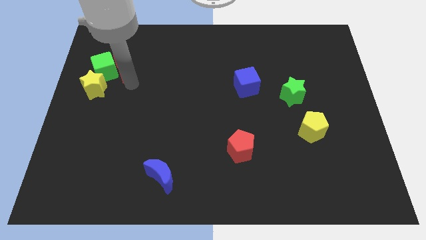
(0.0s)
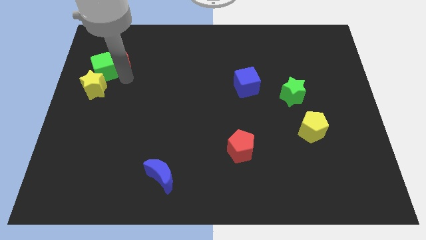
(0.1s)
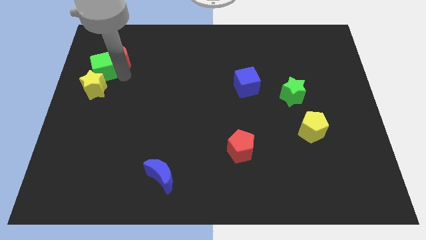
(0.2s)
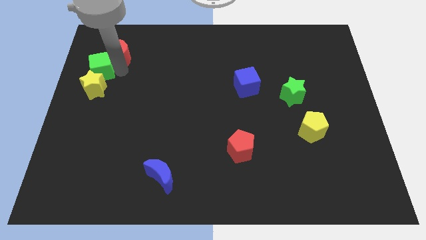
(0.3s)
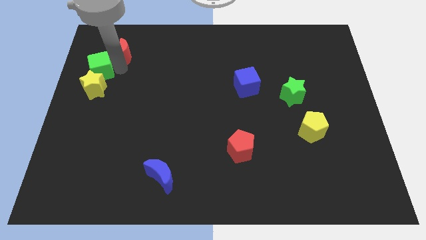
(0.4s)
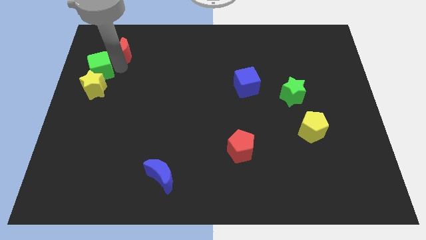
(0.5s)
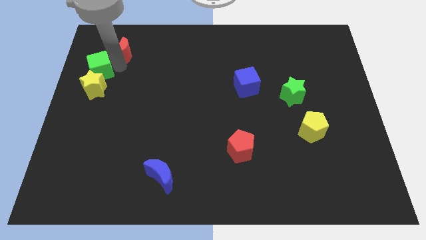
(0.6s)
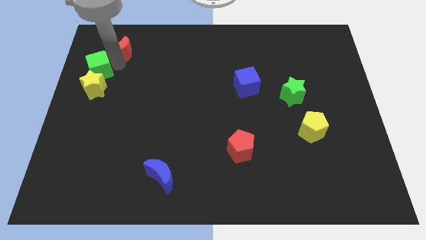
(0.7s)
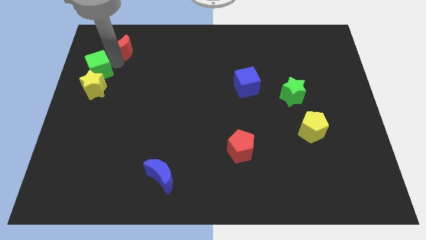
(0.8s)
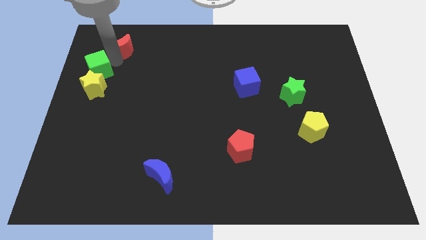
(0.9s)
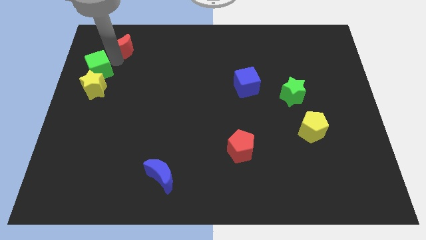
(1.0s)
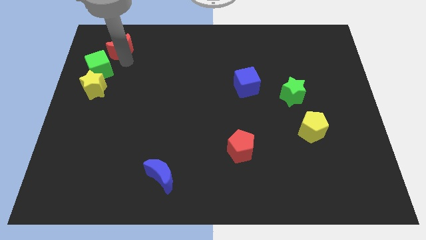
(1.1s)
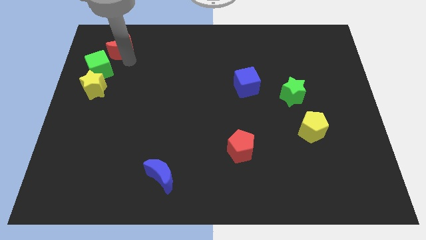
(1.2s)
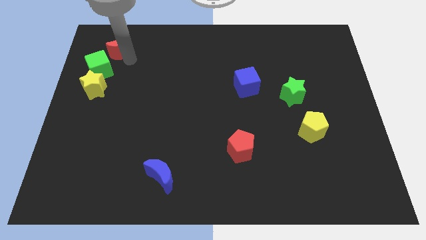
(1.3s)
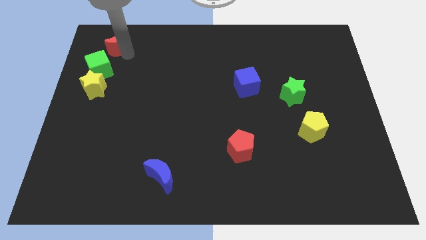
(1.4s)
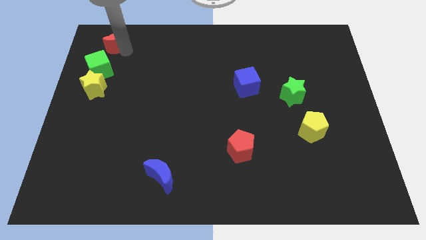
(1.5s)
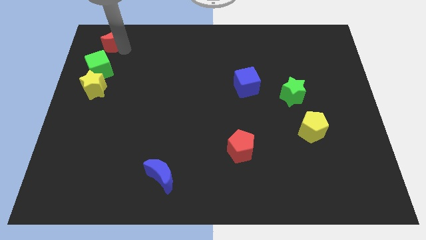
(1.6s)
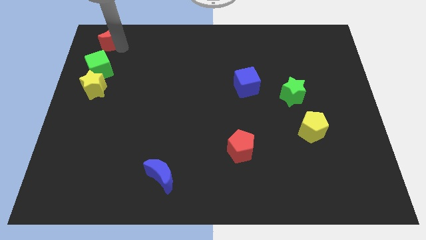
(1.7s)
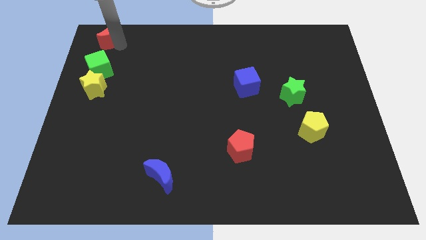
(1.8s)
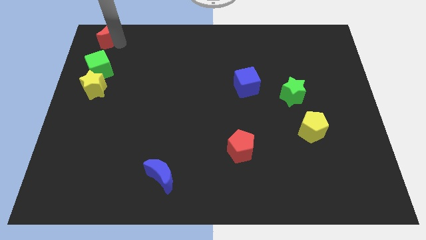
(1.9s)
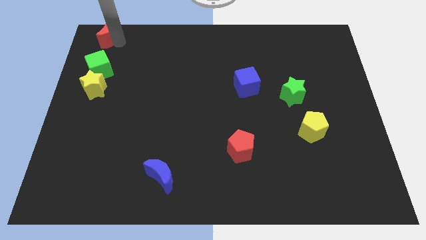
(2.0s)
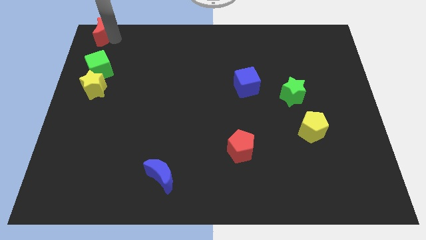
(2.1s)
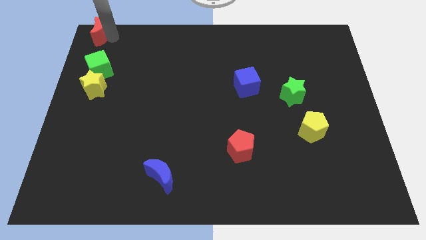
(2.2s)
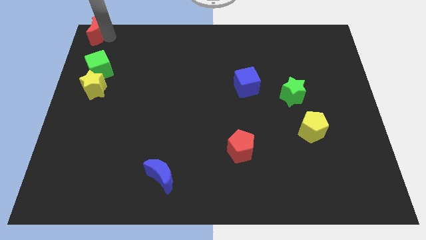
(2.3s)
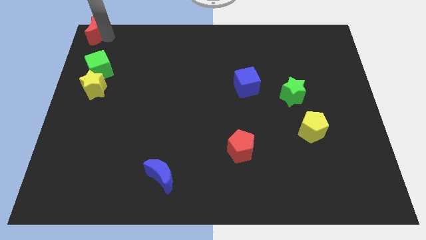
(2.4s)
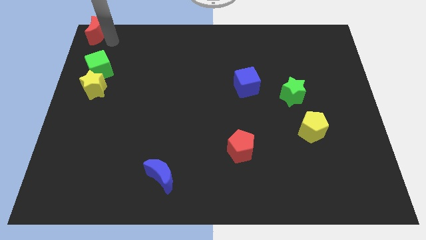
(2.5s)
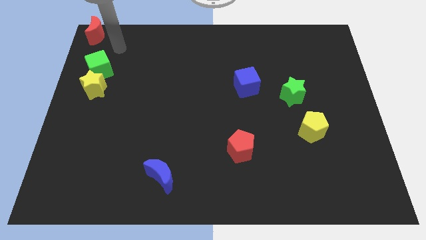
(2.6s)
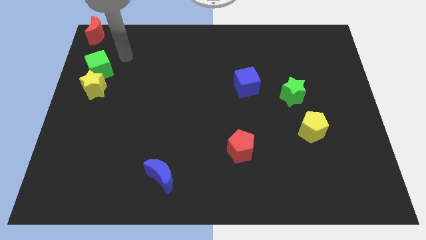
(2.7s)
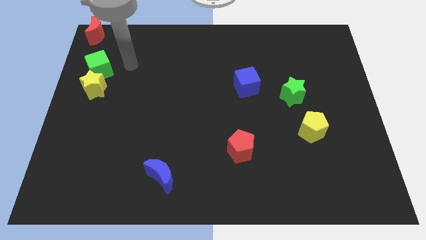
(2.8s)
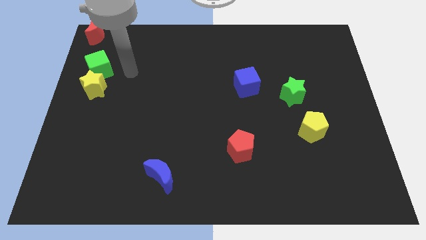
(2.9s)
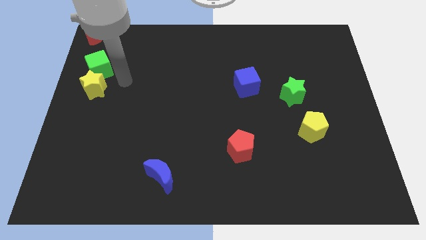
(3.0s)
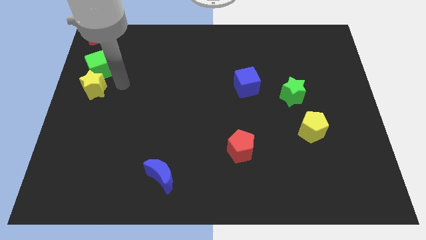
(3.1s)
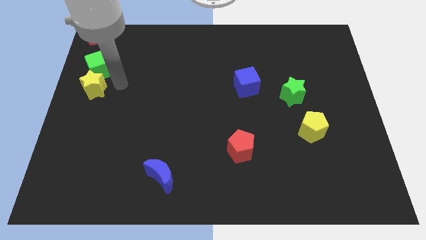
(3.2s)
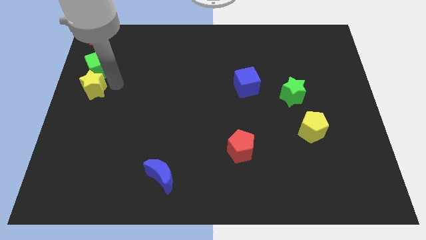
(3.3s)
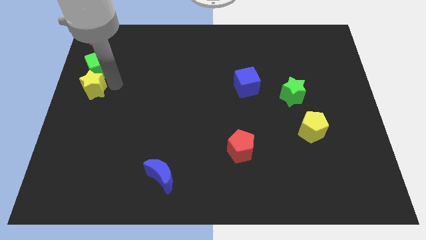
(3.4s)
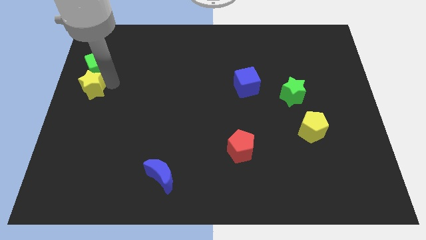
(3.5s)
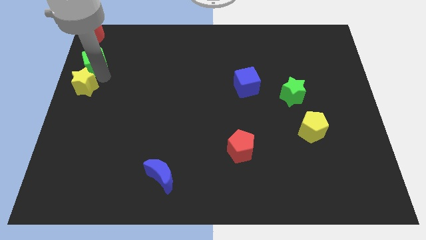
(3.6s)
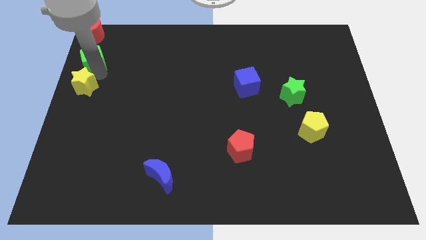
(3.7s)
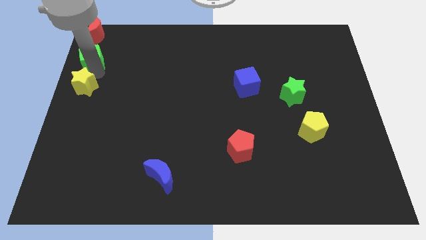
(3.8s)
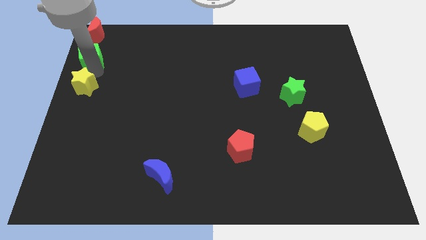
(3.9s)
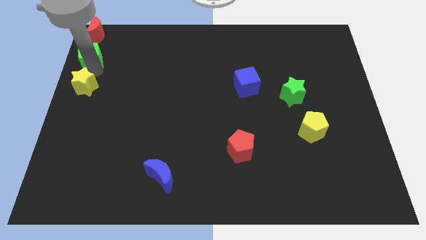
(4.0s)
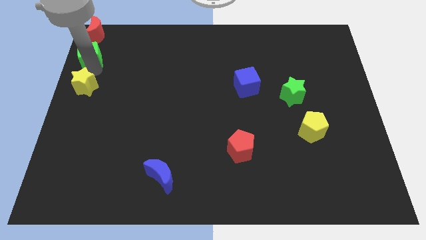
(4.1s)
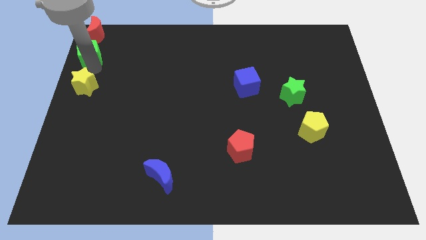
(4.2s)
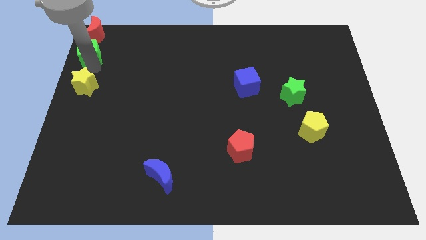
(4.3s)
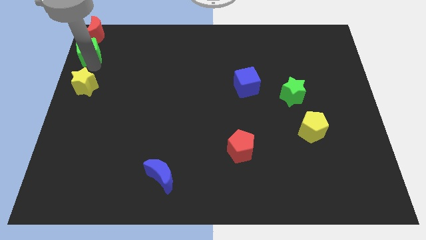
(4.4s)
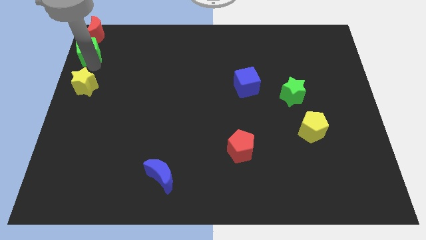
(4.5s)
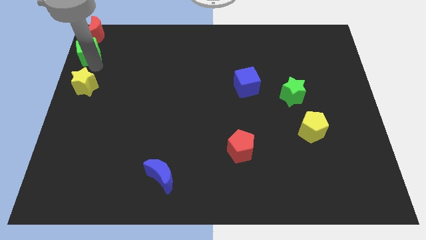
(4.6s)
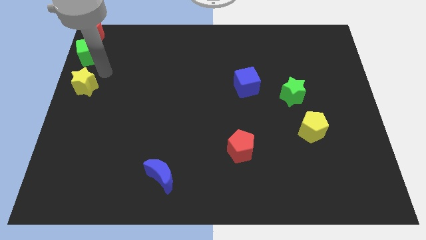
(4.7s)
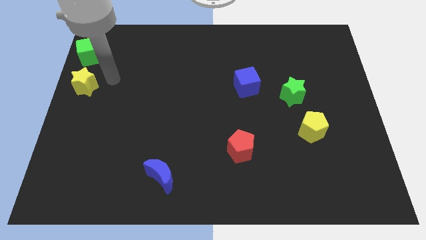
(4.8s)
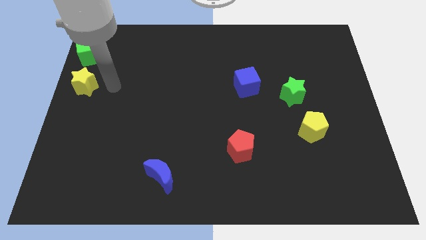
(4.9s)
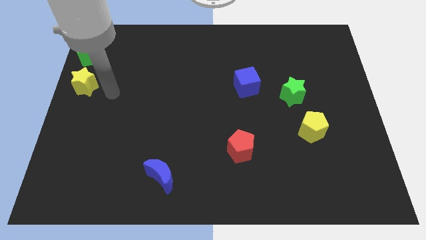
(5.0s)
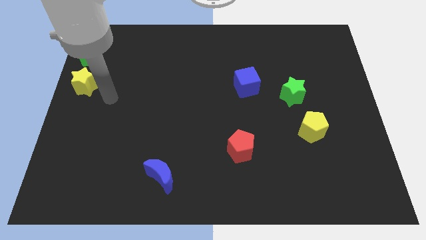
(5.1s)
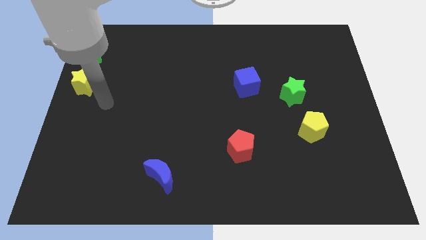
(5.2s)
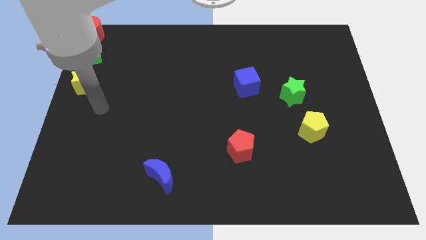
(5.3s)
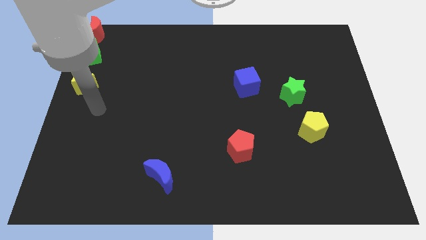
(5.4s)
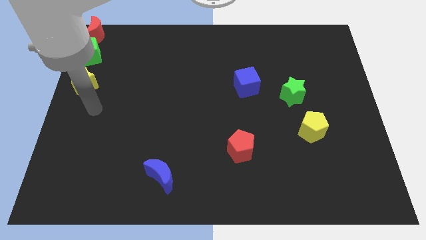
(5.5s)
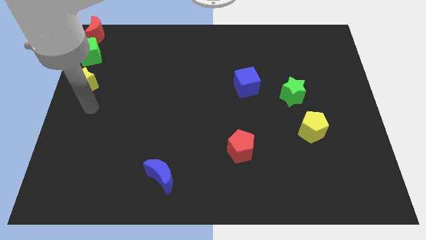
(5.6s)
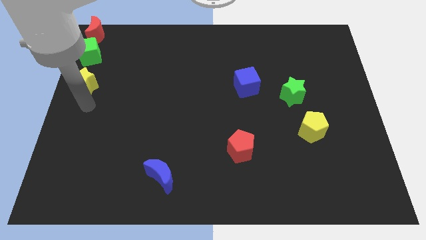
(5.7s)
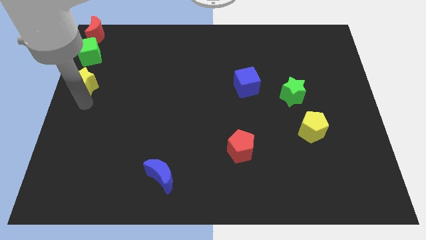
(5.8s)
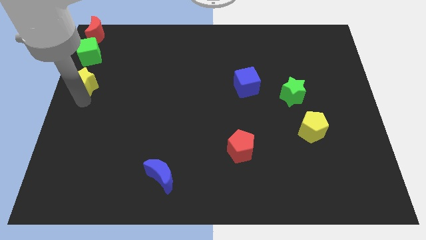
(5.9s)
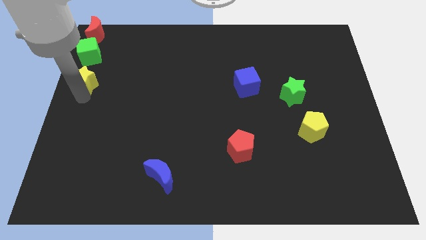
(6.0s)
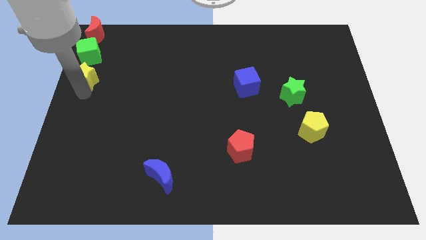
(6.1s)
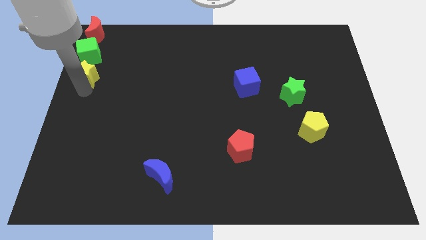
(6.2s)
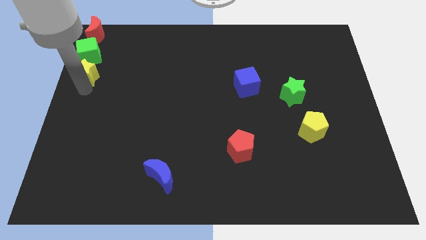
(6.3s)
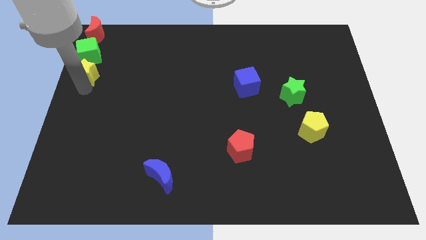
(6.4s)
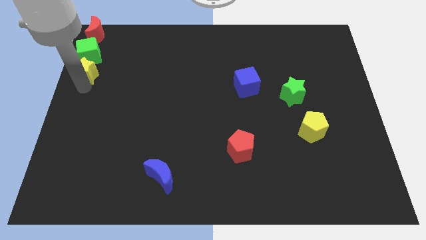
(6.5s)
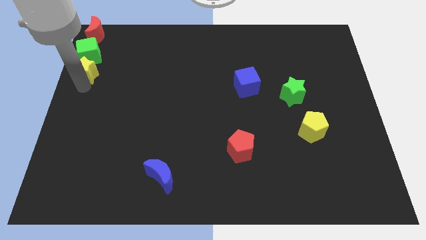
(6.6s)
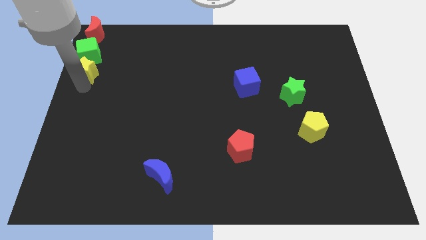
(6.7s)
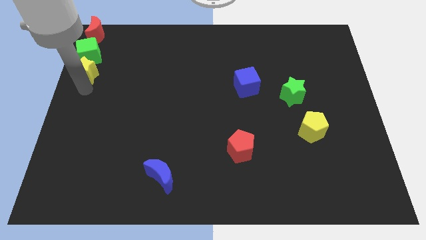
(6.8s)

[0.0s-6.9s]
line up the red moon green cube and the yellow star in a line vertically

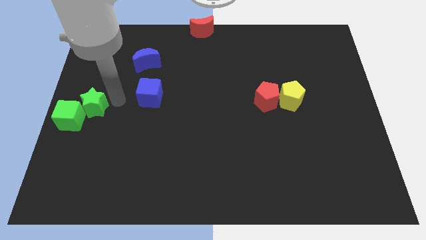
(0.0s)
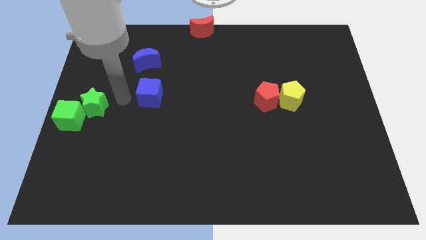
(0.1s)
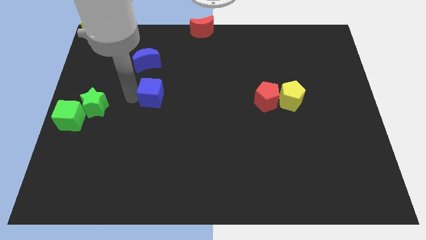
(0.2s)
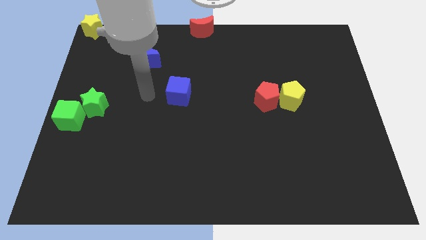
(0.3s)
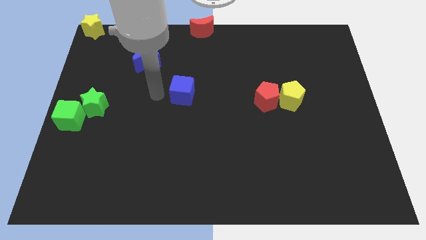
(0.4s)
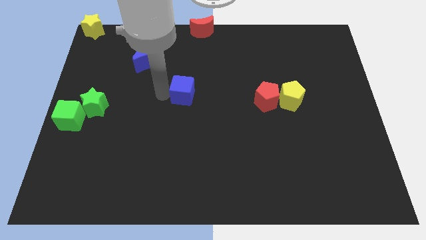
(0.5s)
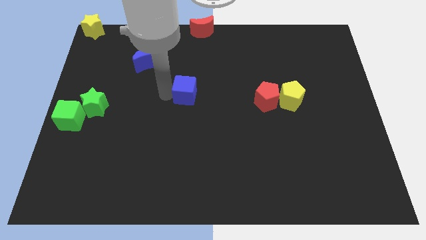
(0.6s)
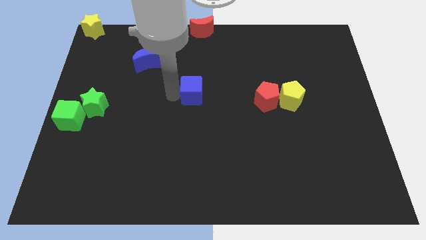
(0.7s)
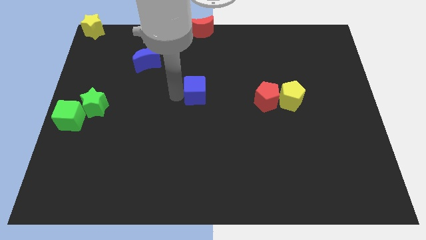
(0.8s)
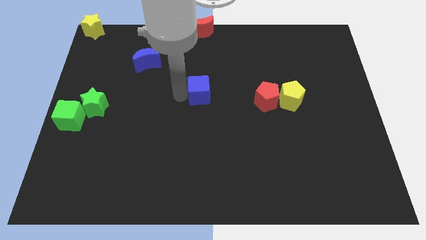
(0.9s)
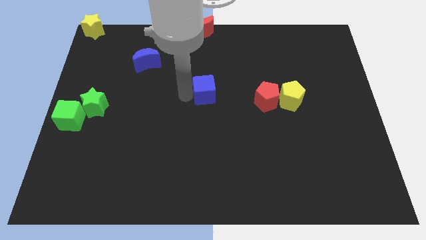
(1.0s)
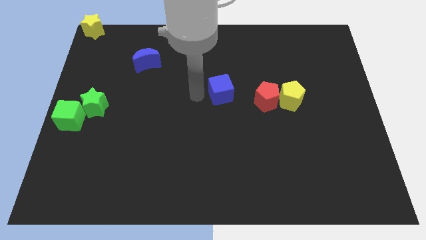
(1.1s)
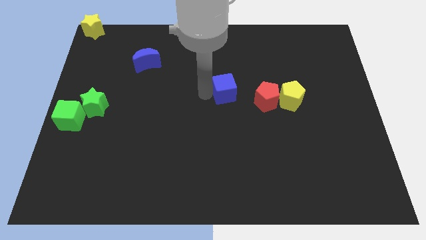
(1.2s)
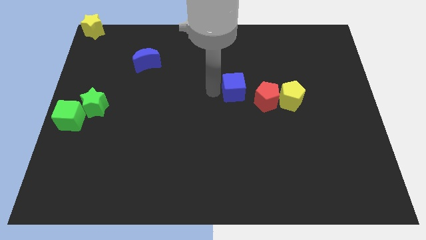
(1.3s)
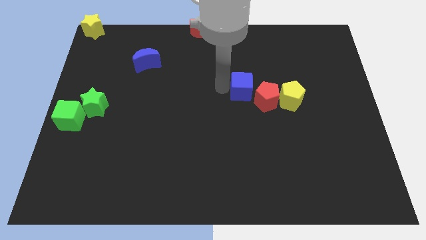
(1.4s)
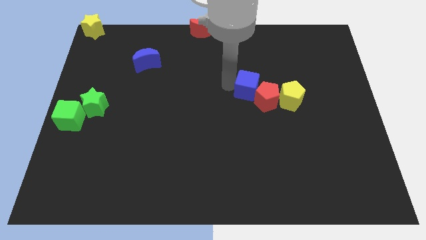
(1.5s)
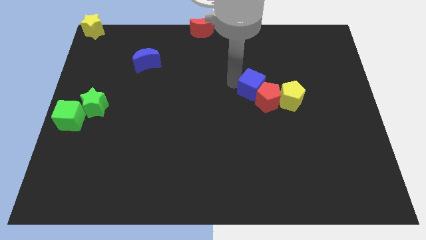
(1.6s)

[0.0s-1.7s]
place the blue cube diagonally top left to the red pentagon

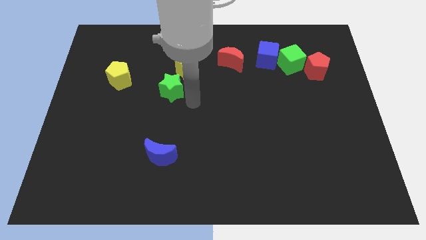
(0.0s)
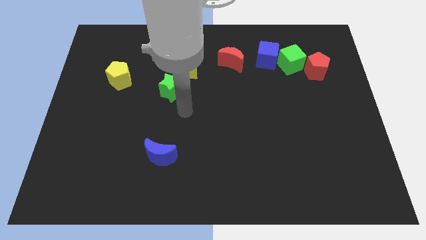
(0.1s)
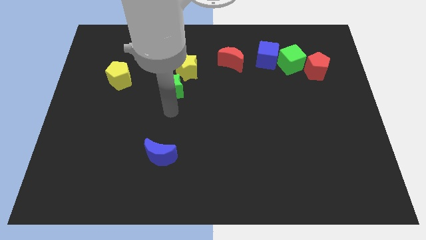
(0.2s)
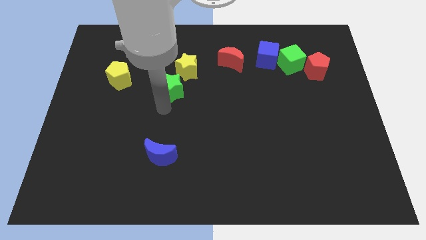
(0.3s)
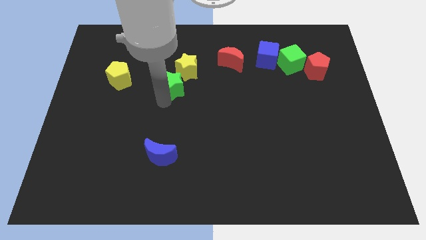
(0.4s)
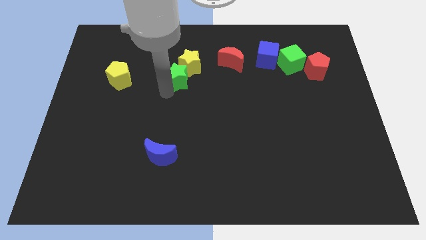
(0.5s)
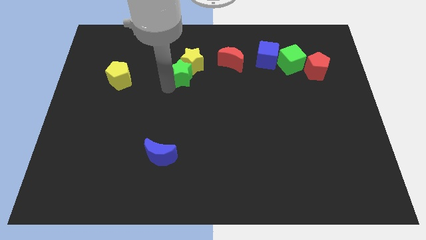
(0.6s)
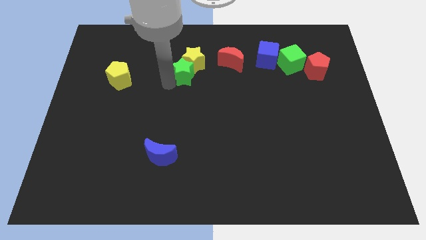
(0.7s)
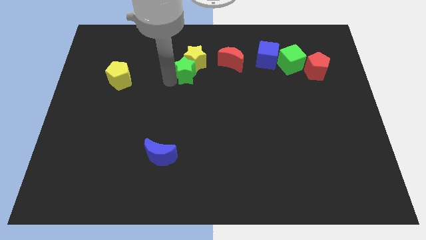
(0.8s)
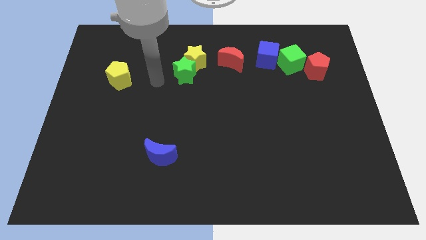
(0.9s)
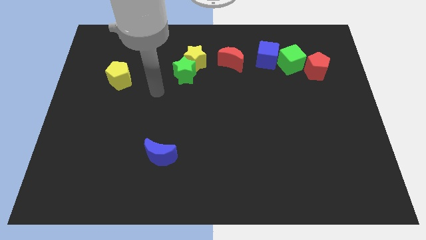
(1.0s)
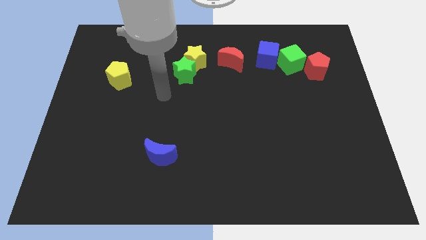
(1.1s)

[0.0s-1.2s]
slightly push the yellow star with the green star towards the top center of the board
